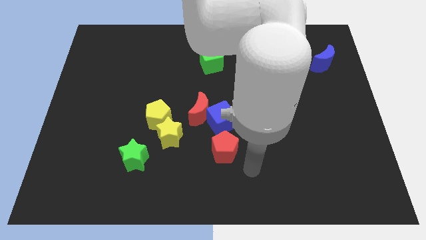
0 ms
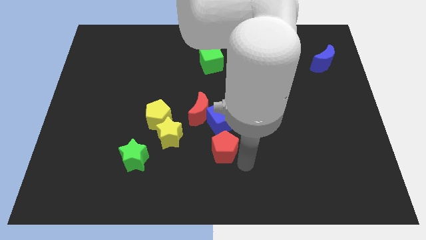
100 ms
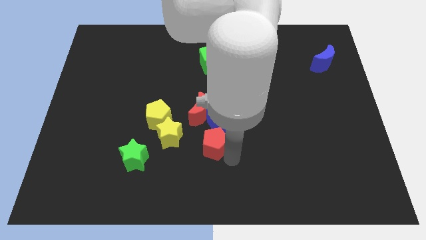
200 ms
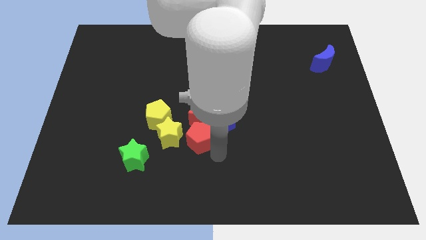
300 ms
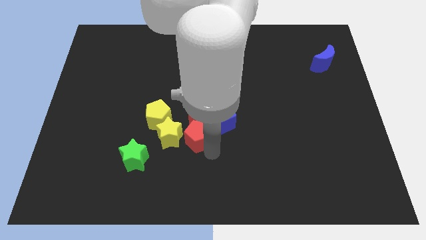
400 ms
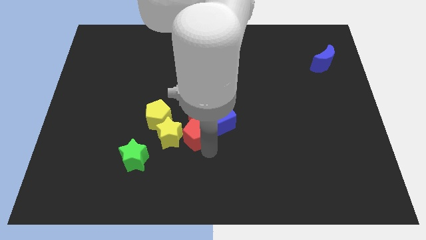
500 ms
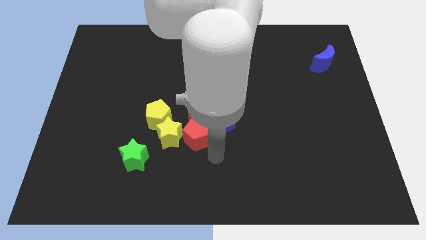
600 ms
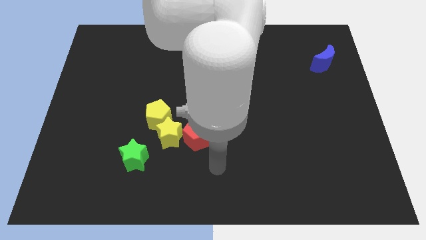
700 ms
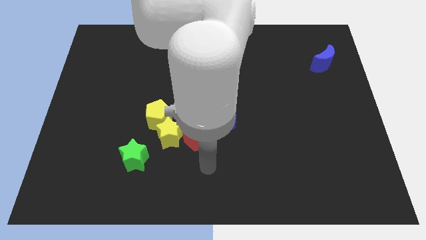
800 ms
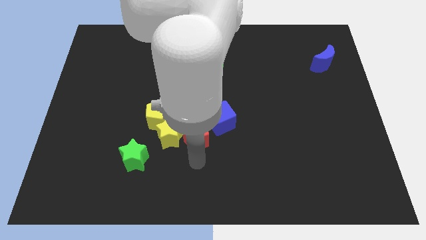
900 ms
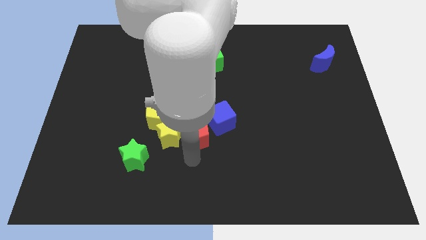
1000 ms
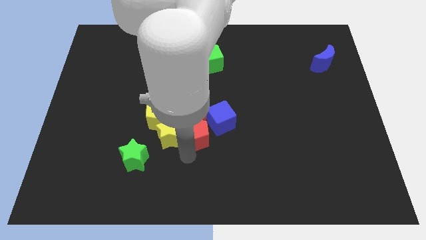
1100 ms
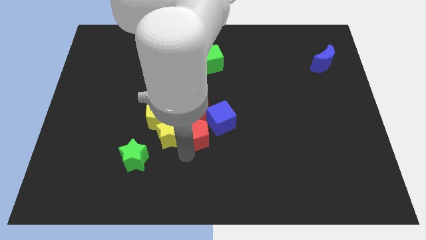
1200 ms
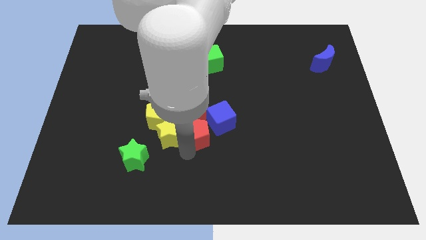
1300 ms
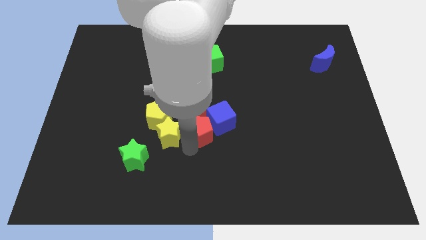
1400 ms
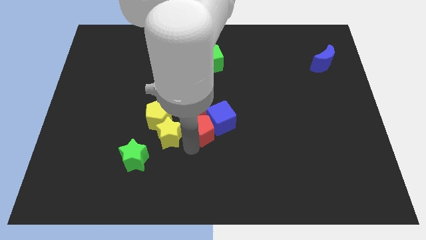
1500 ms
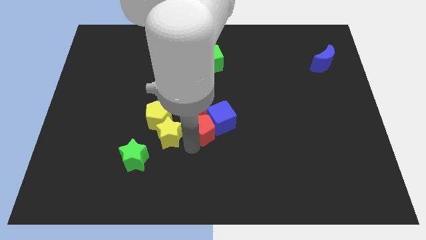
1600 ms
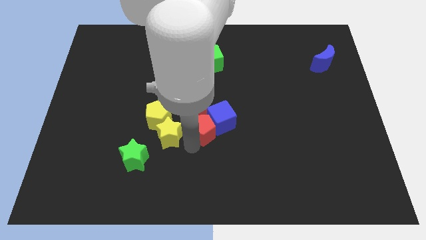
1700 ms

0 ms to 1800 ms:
push the red pentagon into blue cube

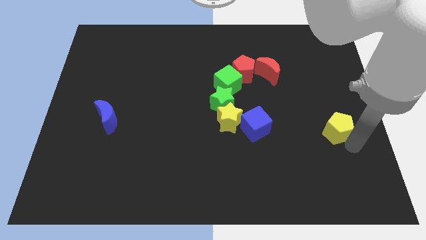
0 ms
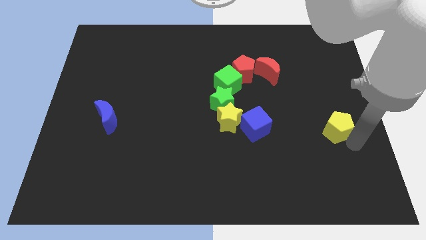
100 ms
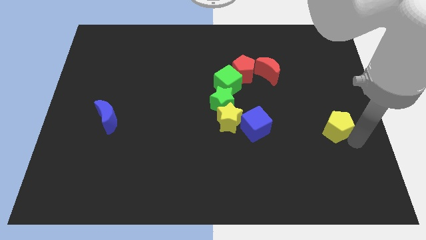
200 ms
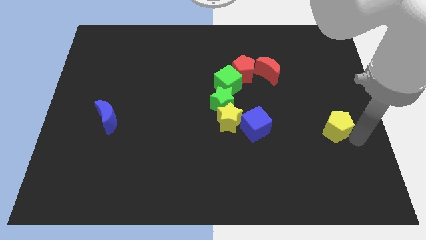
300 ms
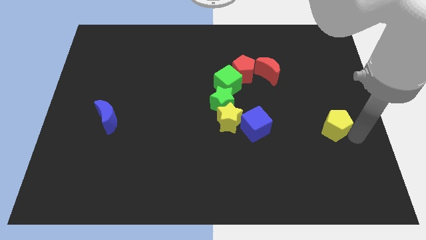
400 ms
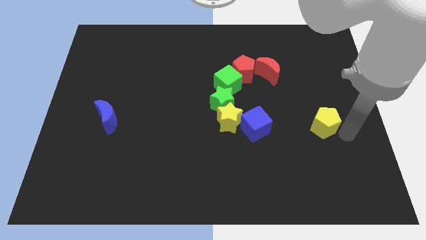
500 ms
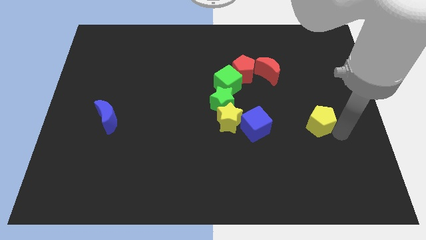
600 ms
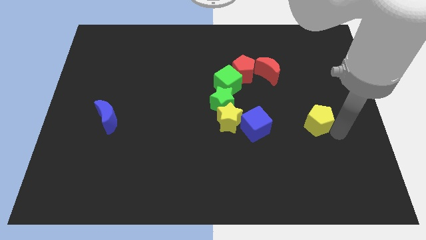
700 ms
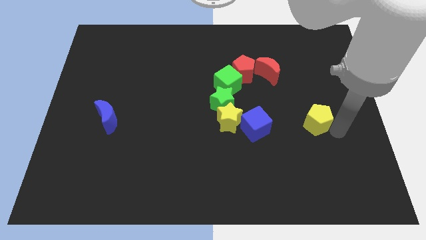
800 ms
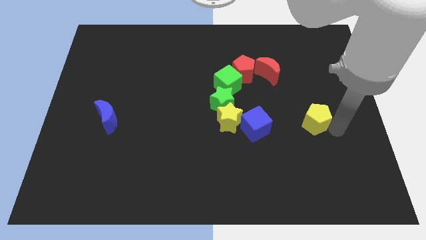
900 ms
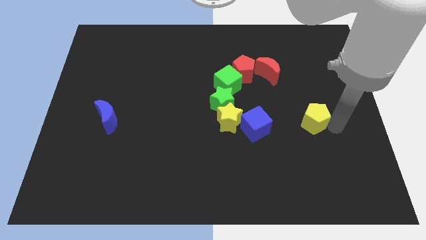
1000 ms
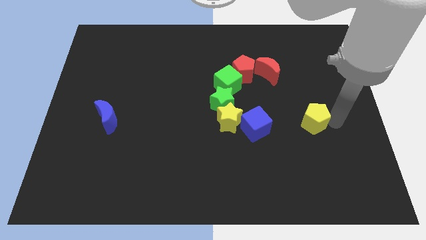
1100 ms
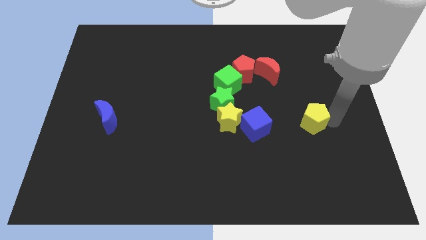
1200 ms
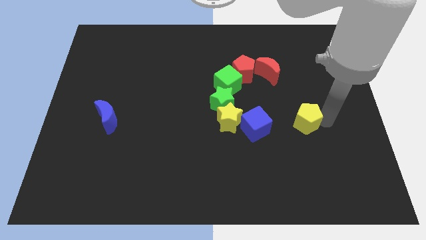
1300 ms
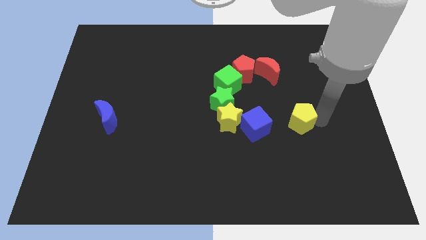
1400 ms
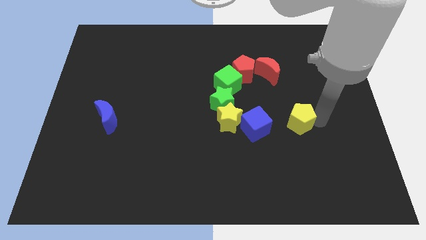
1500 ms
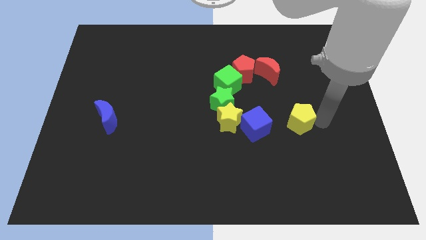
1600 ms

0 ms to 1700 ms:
push the yellow pentagon closer to the blue cube

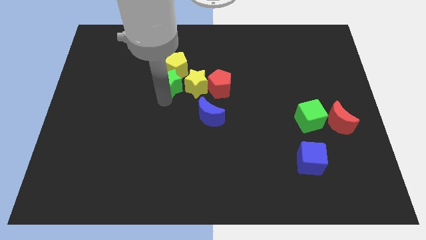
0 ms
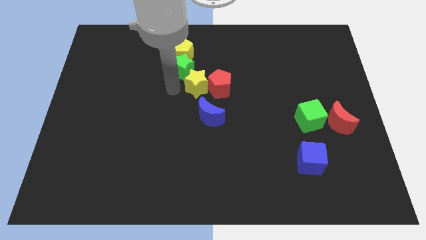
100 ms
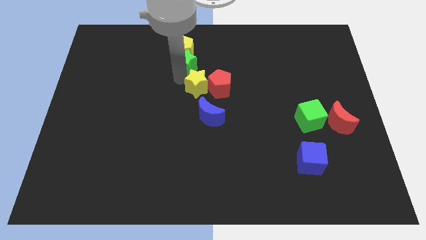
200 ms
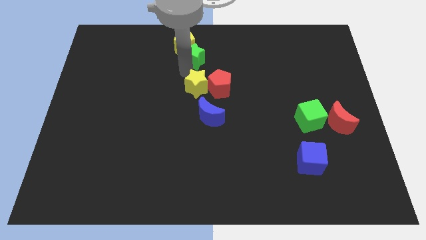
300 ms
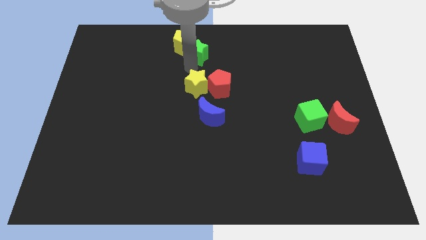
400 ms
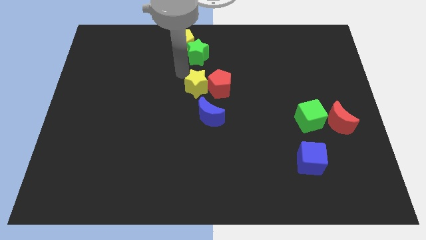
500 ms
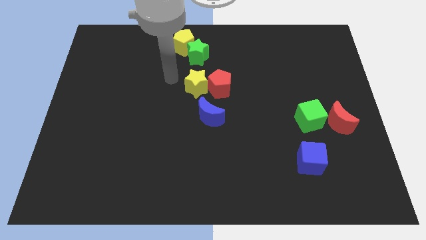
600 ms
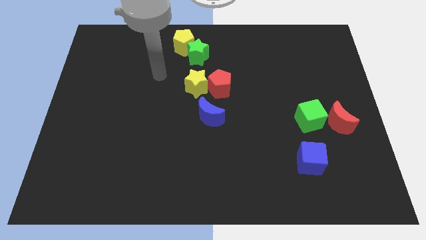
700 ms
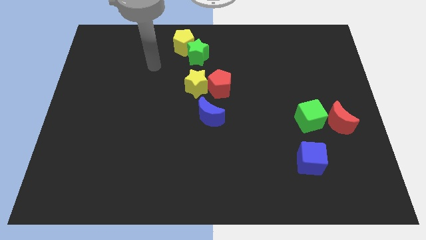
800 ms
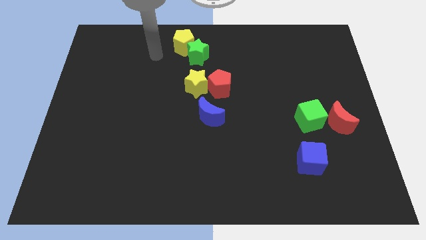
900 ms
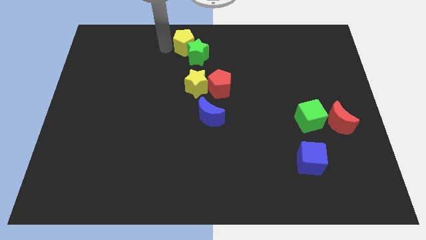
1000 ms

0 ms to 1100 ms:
push the green star into the yellow pentagon

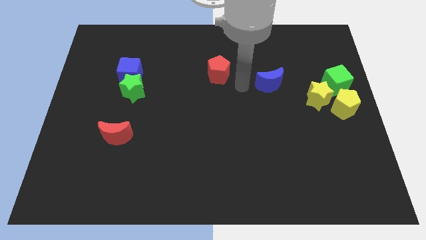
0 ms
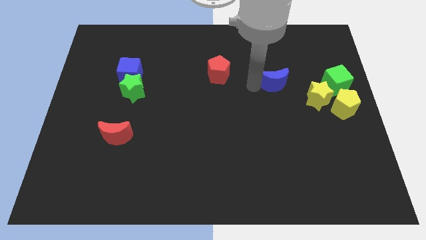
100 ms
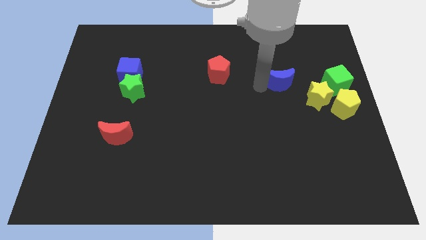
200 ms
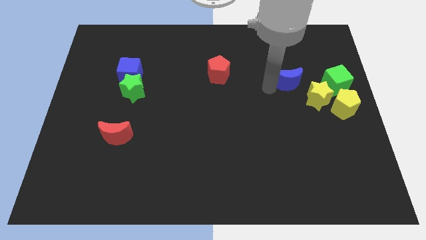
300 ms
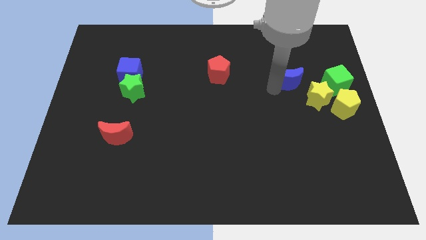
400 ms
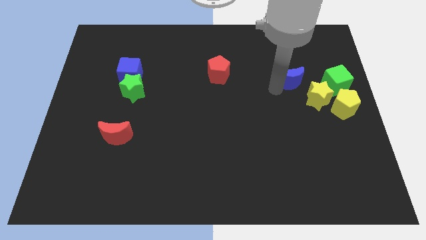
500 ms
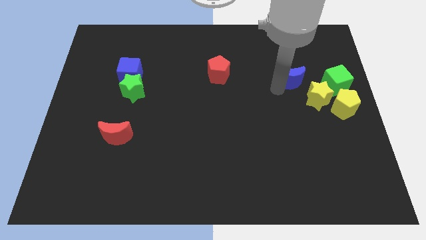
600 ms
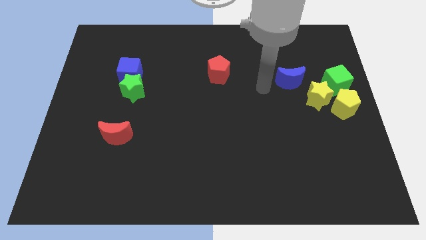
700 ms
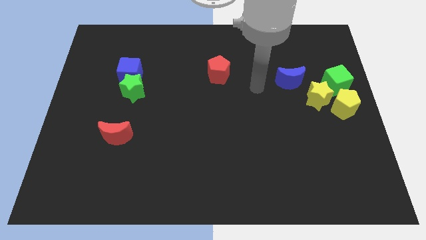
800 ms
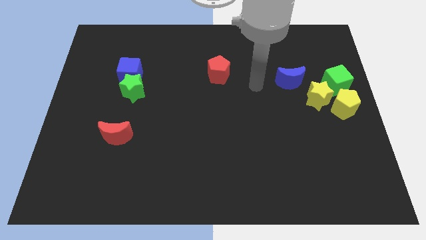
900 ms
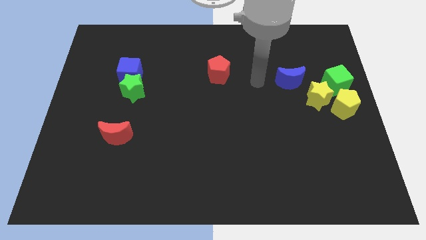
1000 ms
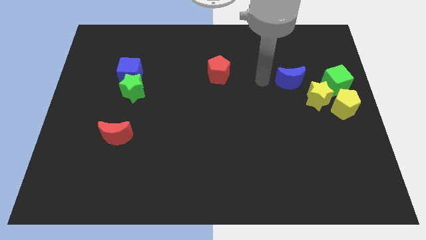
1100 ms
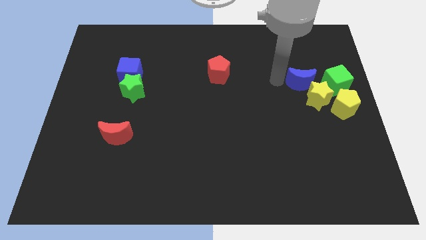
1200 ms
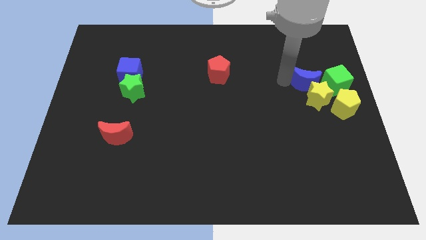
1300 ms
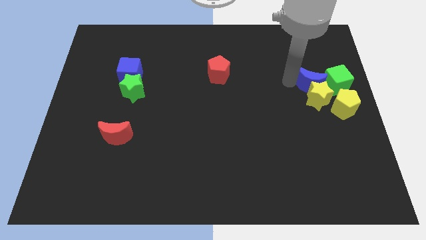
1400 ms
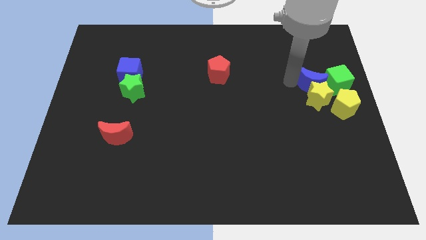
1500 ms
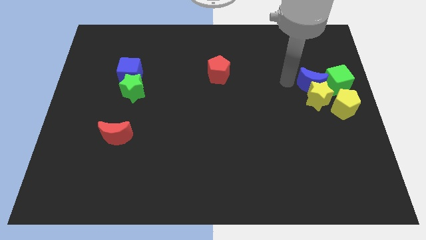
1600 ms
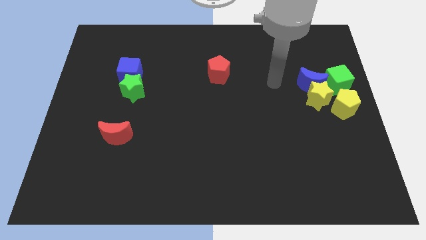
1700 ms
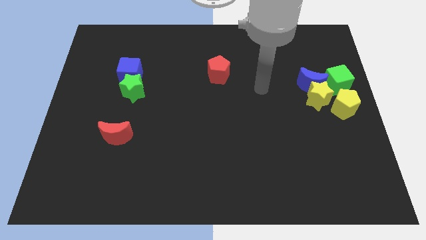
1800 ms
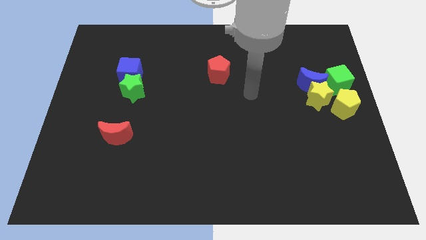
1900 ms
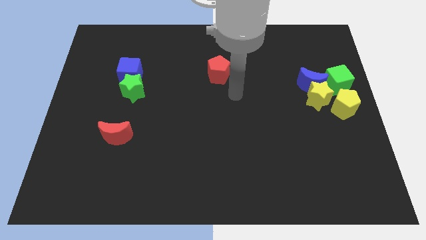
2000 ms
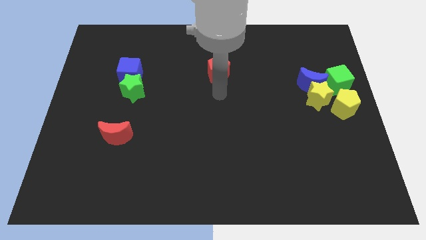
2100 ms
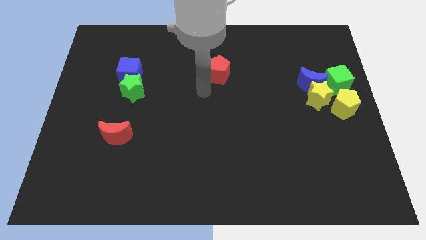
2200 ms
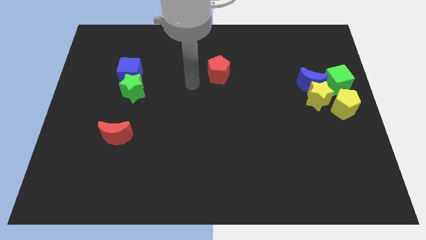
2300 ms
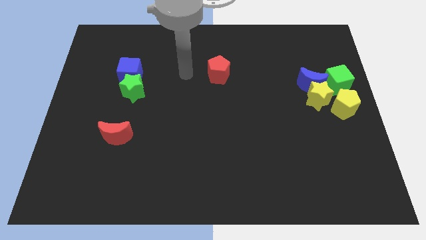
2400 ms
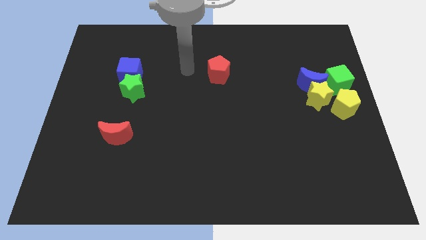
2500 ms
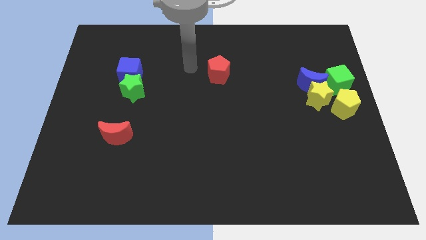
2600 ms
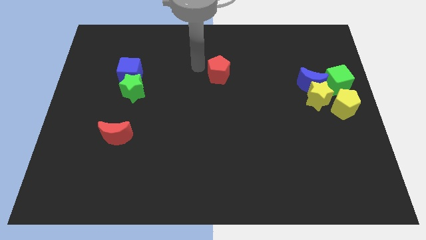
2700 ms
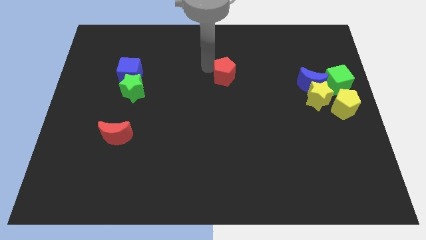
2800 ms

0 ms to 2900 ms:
place your arm at the top left side of red pentagon

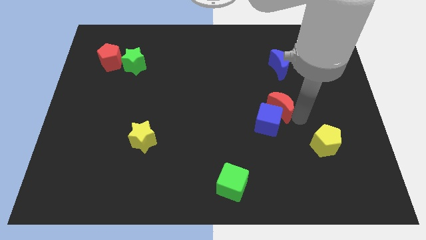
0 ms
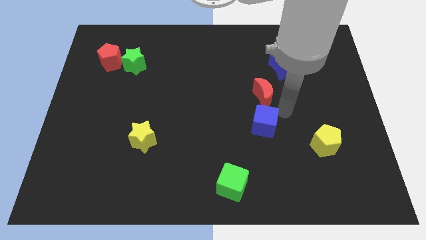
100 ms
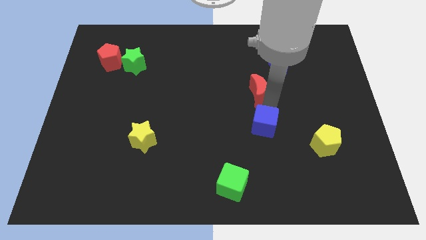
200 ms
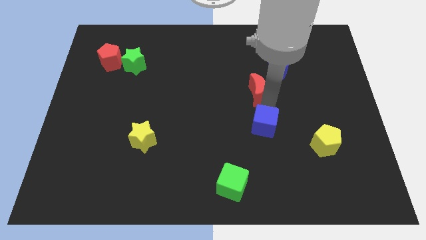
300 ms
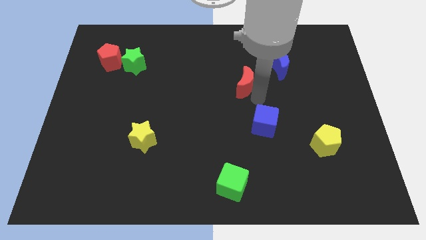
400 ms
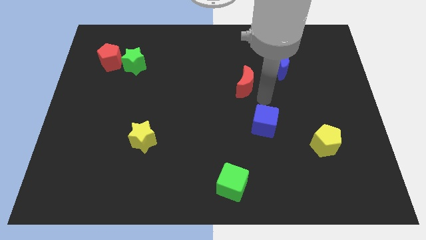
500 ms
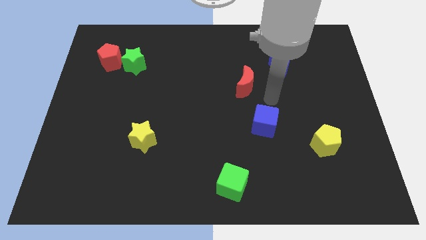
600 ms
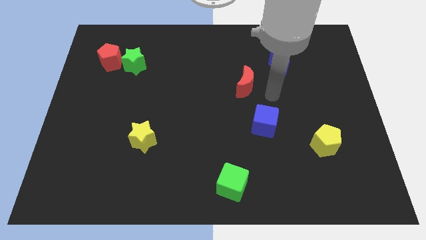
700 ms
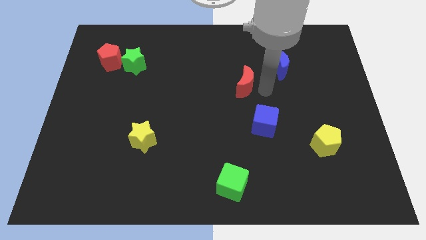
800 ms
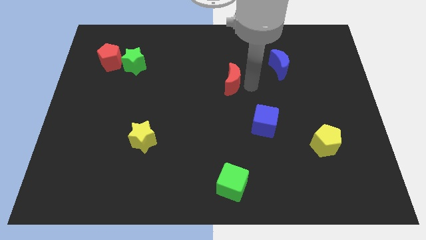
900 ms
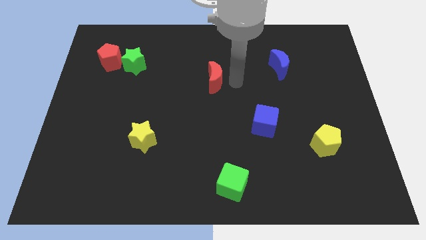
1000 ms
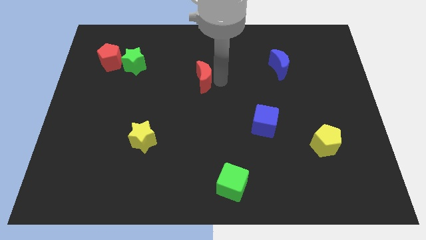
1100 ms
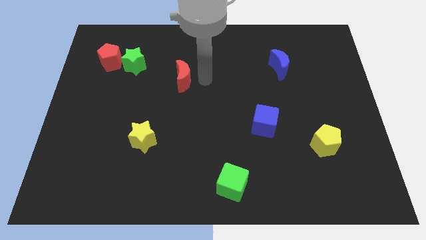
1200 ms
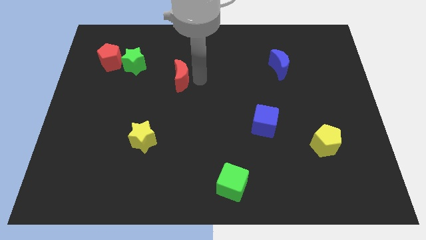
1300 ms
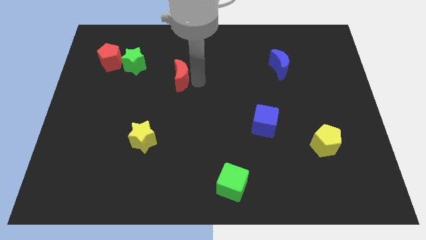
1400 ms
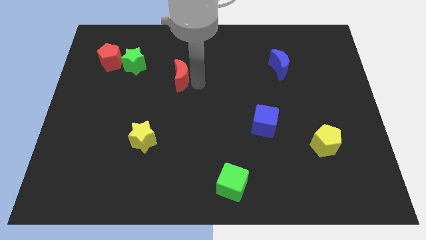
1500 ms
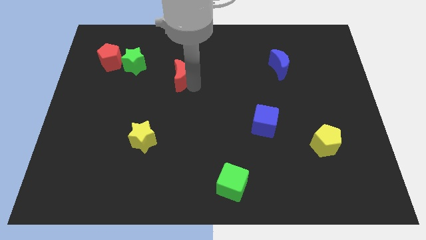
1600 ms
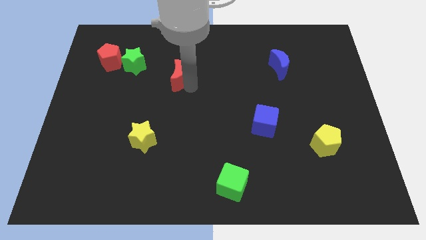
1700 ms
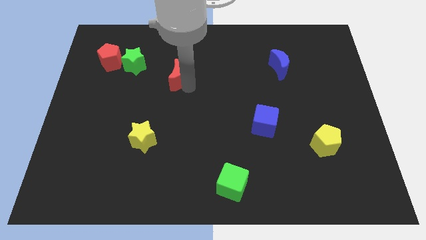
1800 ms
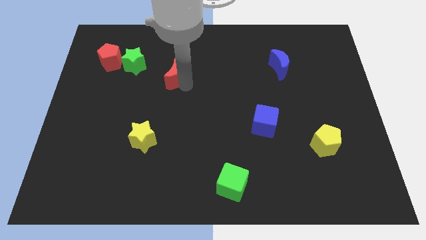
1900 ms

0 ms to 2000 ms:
place the red moon close to the green star
